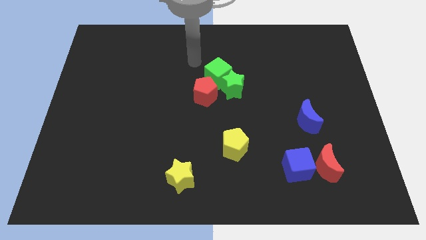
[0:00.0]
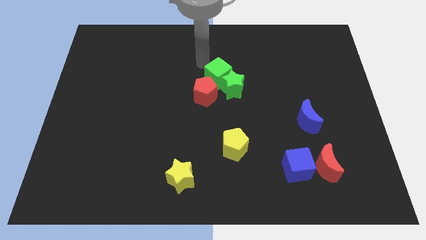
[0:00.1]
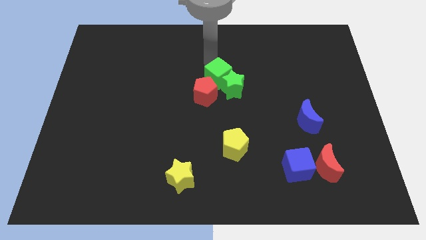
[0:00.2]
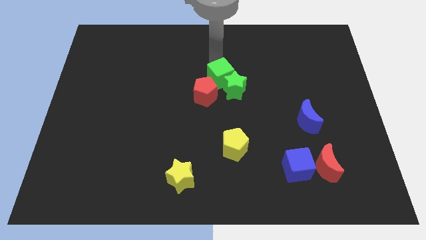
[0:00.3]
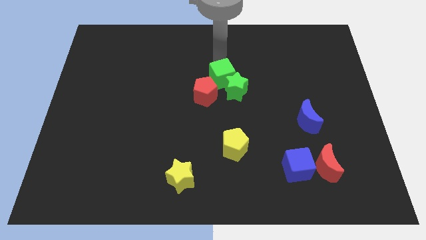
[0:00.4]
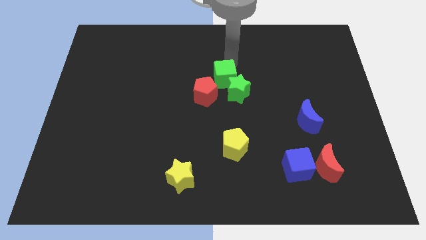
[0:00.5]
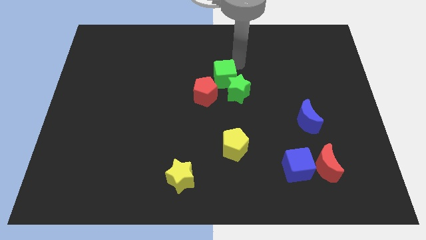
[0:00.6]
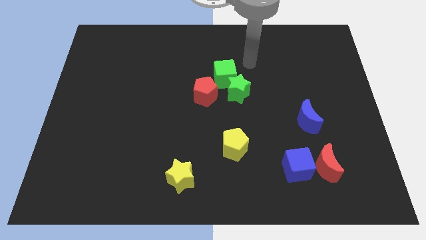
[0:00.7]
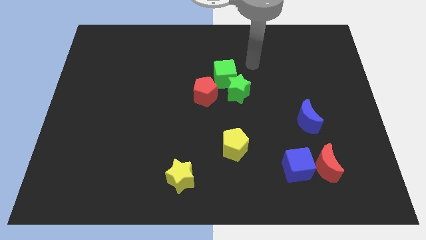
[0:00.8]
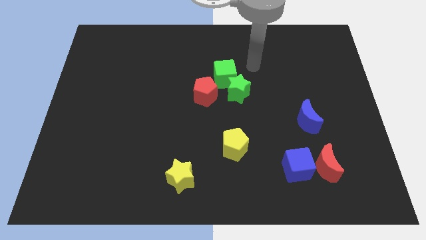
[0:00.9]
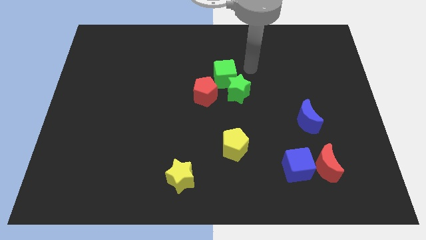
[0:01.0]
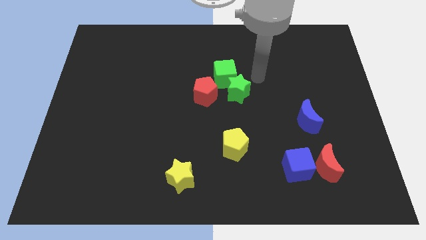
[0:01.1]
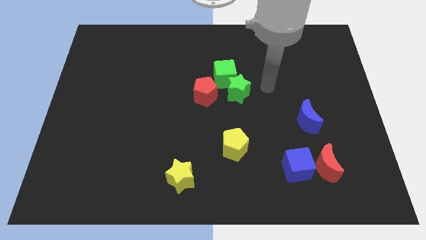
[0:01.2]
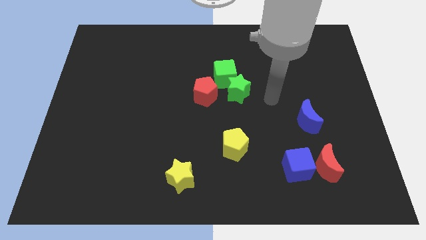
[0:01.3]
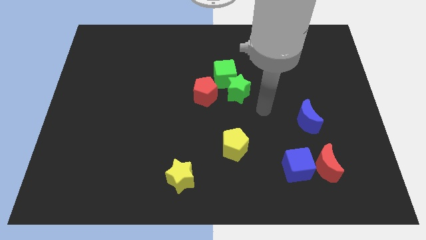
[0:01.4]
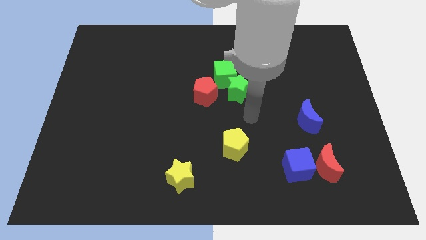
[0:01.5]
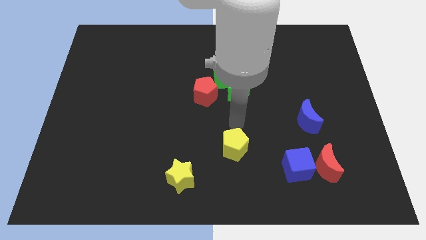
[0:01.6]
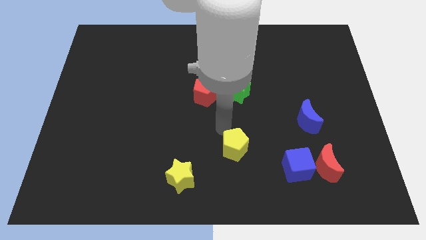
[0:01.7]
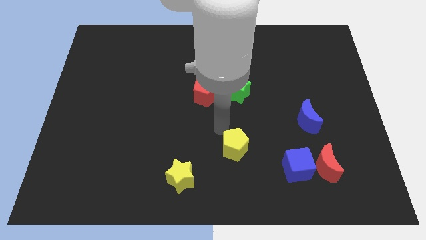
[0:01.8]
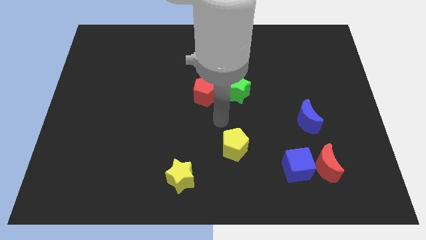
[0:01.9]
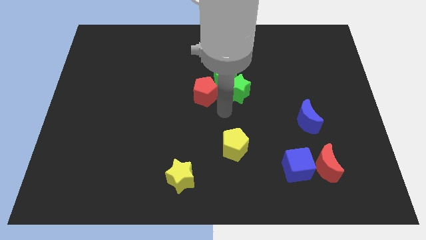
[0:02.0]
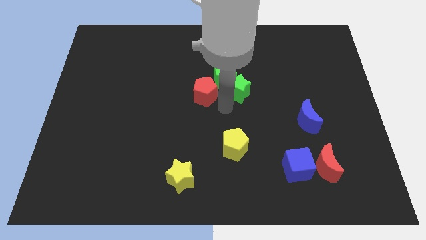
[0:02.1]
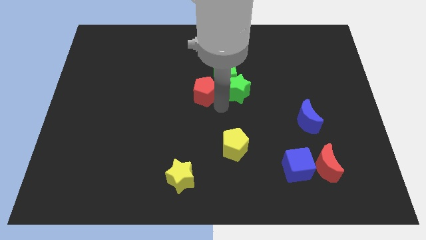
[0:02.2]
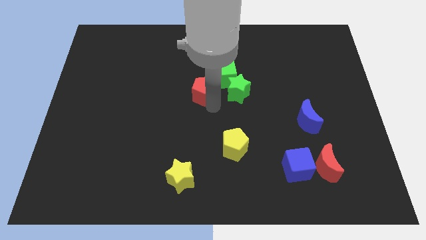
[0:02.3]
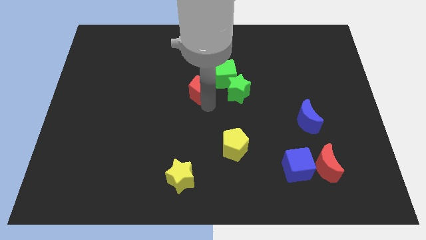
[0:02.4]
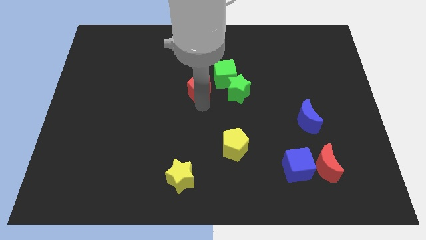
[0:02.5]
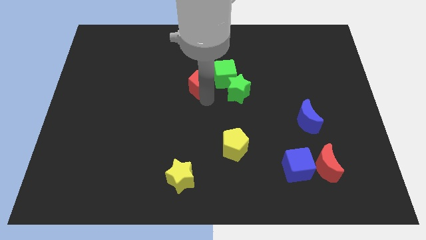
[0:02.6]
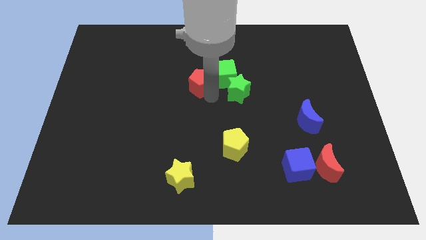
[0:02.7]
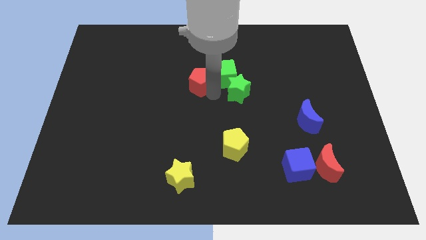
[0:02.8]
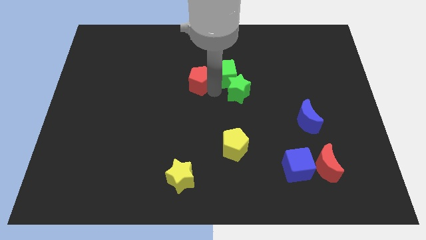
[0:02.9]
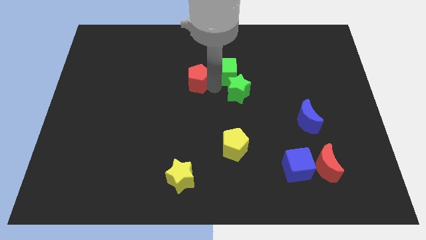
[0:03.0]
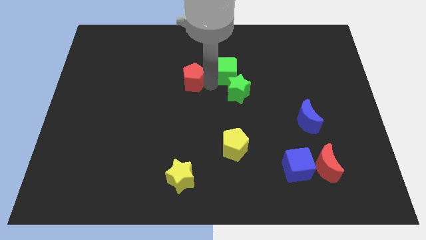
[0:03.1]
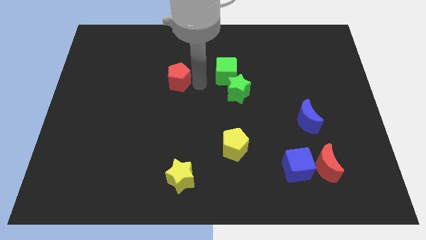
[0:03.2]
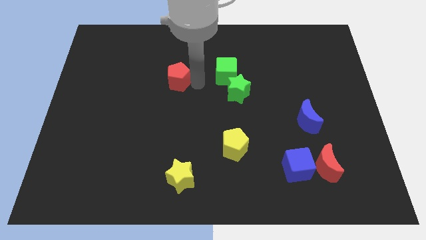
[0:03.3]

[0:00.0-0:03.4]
separate the red pentagon from the green cube

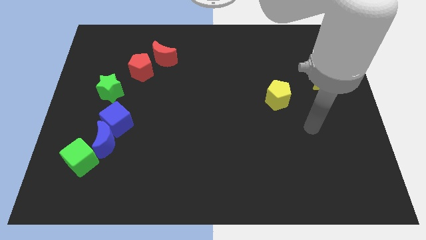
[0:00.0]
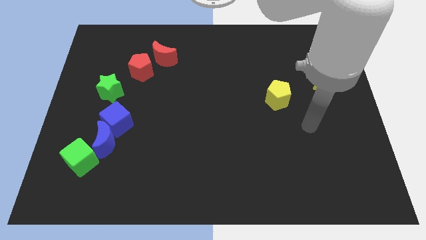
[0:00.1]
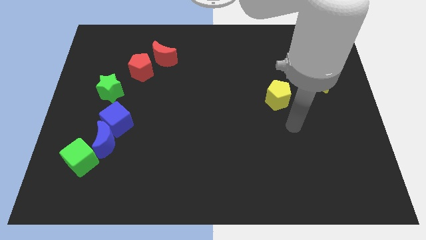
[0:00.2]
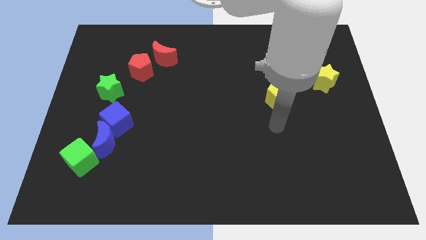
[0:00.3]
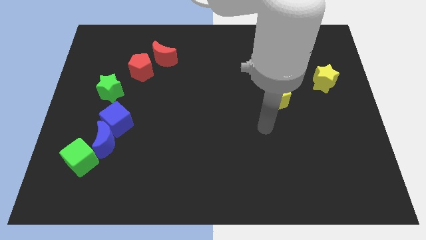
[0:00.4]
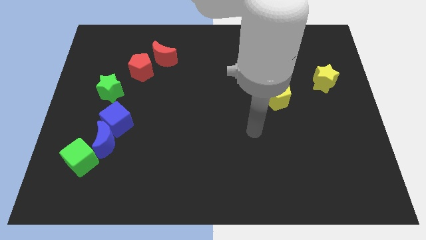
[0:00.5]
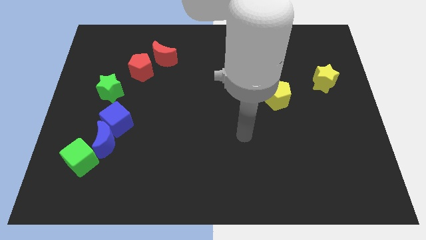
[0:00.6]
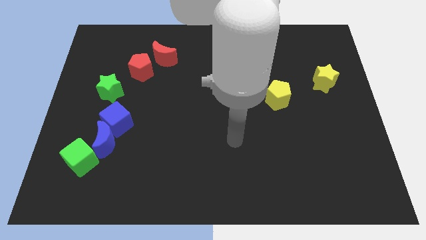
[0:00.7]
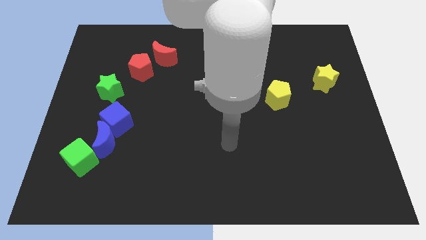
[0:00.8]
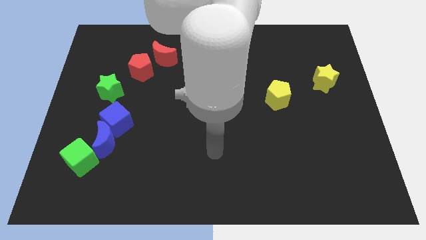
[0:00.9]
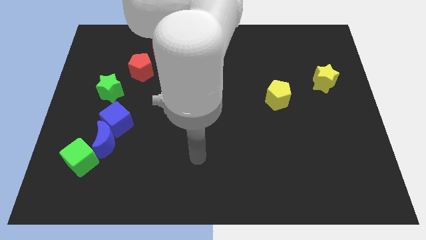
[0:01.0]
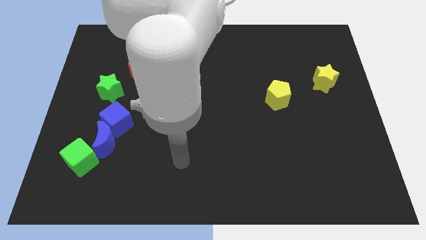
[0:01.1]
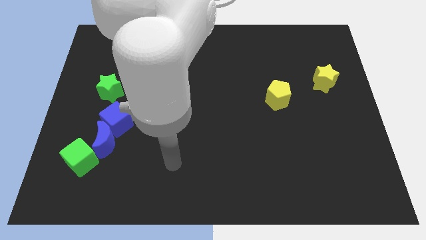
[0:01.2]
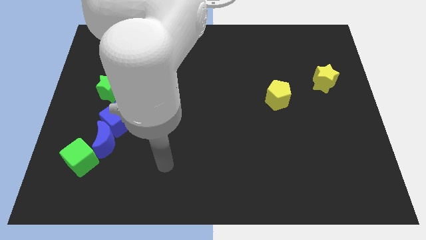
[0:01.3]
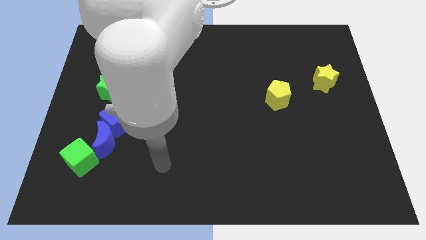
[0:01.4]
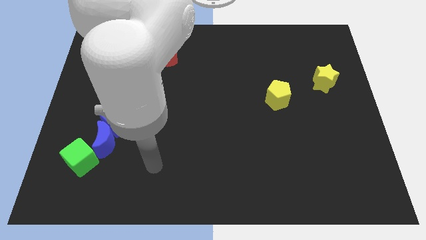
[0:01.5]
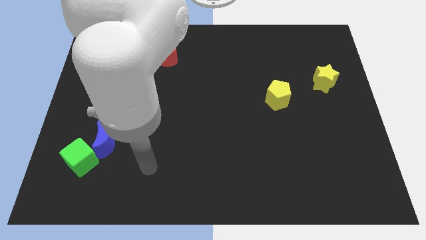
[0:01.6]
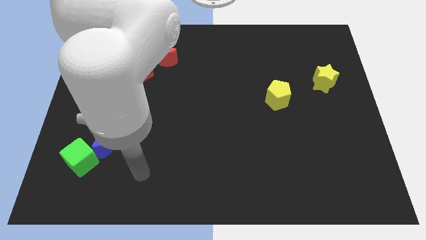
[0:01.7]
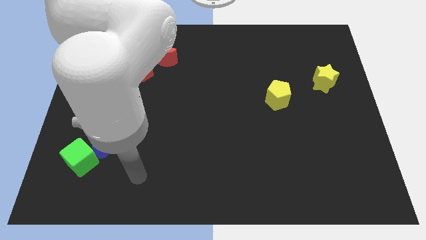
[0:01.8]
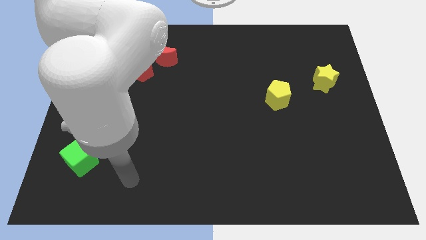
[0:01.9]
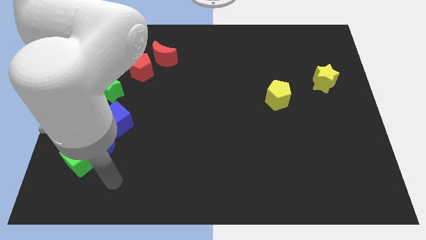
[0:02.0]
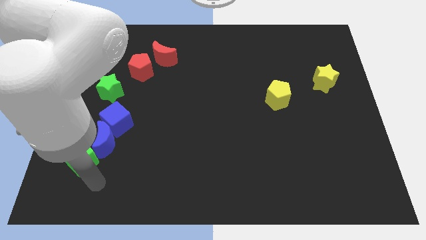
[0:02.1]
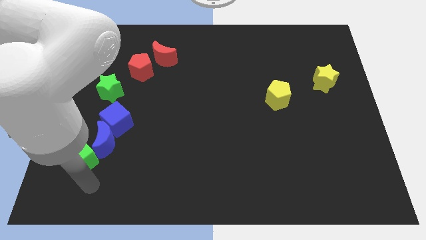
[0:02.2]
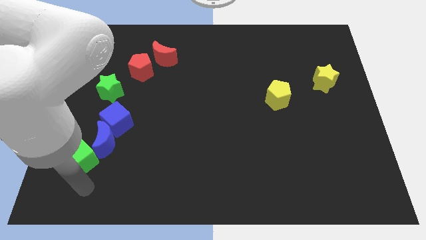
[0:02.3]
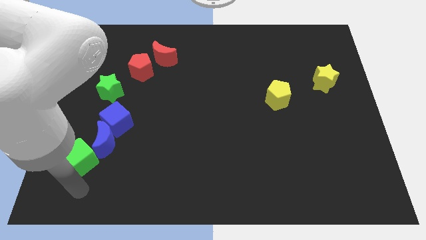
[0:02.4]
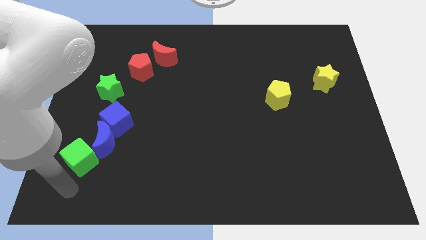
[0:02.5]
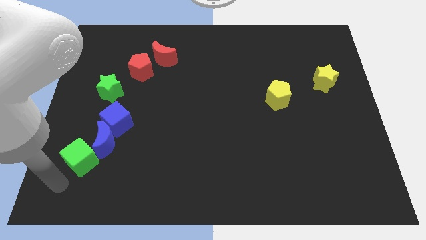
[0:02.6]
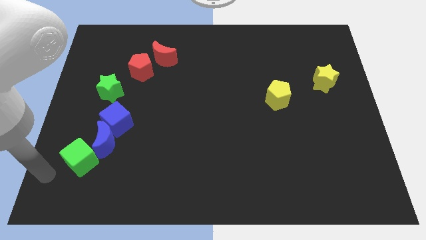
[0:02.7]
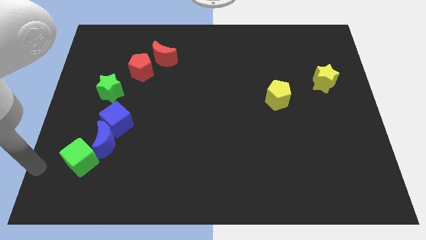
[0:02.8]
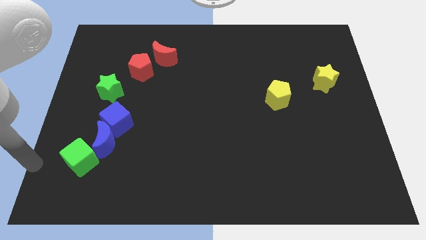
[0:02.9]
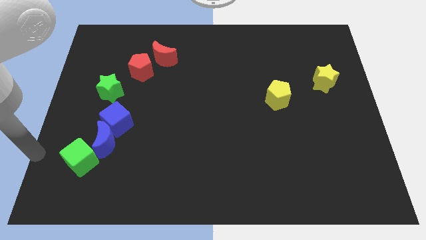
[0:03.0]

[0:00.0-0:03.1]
go and point your arm at the left side of the green cube

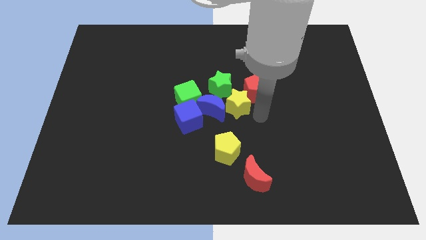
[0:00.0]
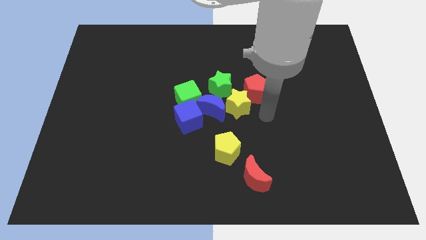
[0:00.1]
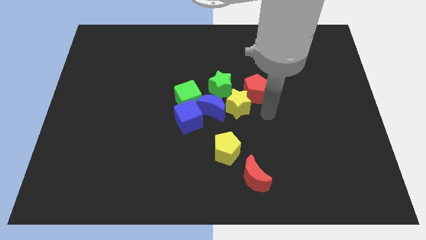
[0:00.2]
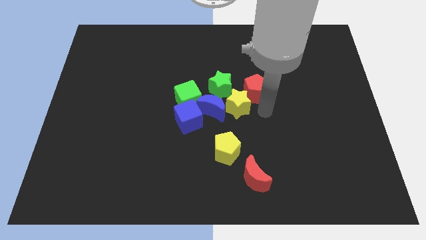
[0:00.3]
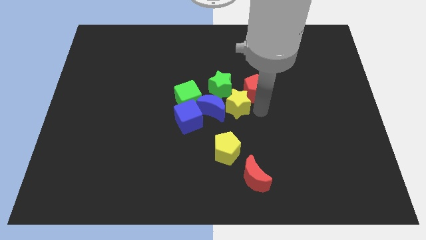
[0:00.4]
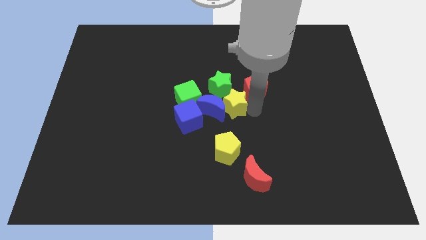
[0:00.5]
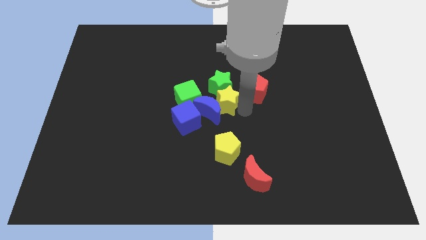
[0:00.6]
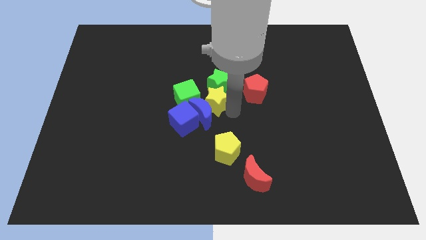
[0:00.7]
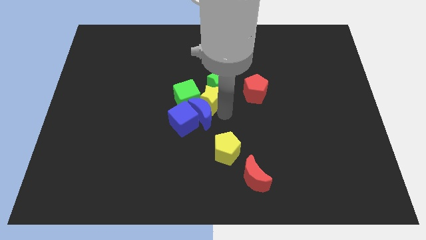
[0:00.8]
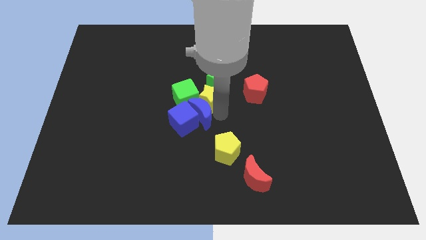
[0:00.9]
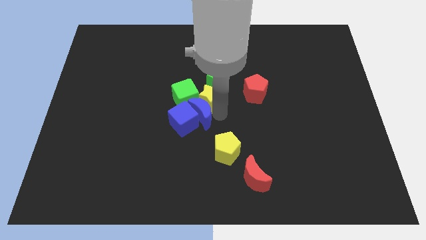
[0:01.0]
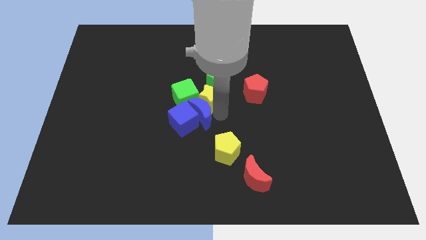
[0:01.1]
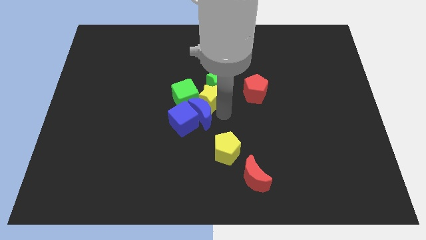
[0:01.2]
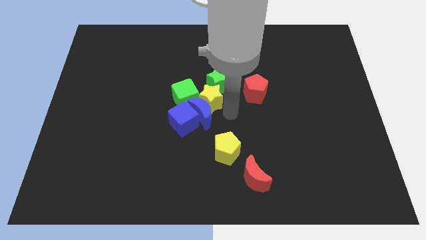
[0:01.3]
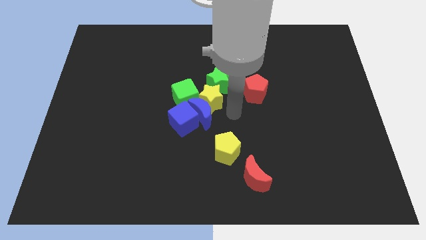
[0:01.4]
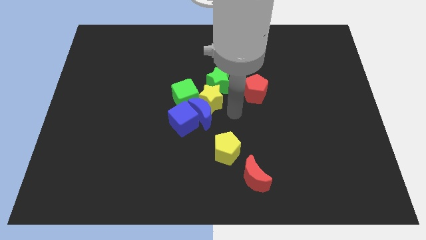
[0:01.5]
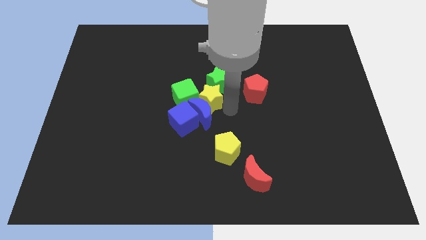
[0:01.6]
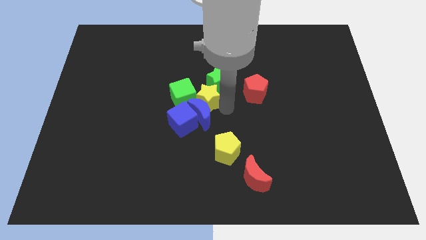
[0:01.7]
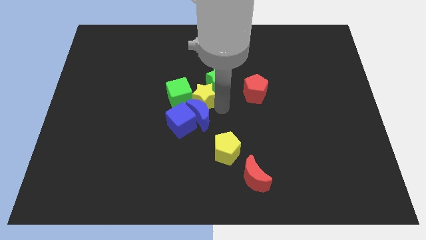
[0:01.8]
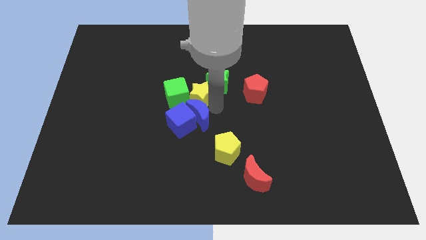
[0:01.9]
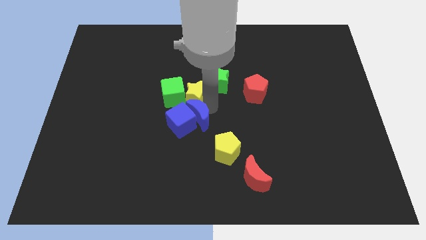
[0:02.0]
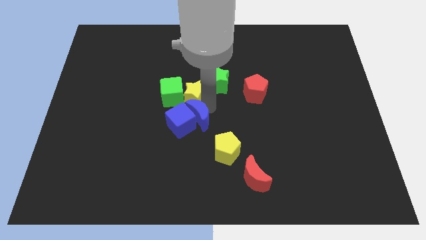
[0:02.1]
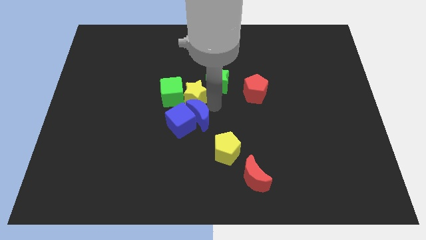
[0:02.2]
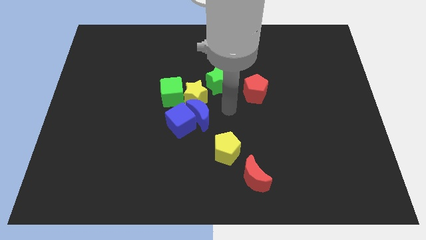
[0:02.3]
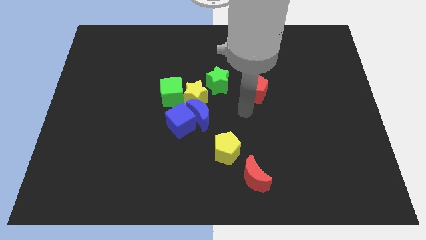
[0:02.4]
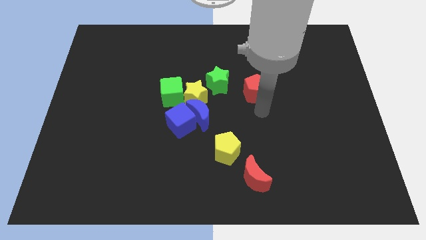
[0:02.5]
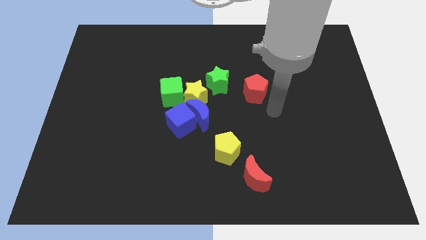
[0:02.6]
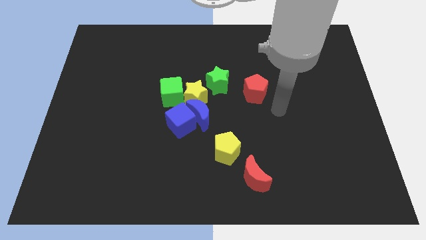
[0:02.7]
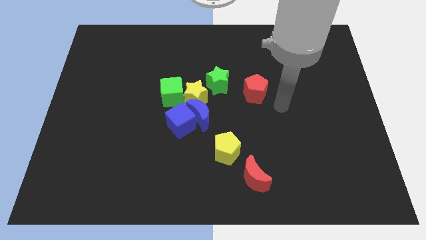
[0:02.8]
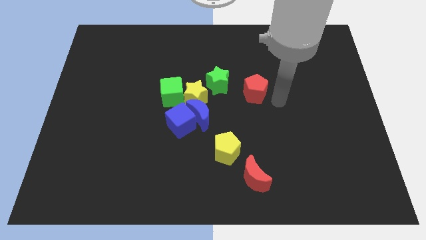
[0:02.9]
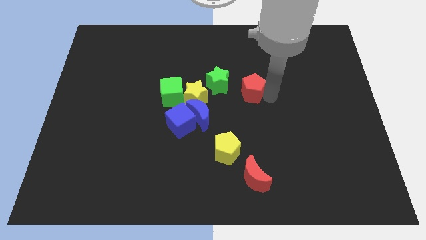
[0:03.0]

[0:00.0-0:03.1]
push the yellow star into the green cube
